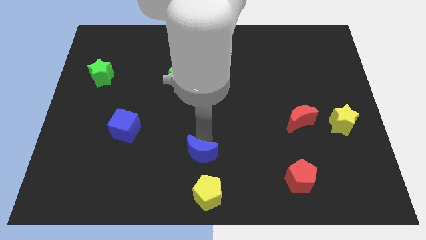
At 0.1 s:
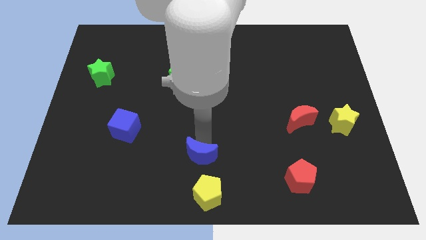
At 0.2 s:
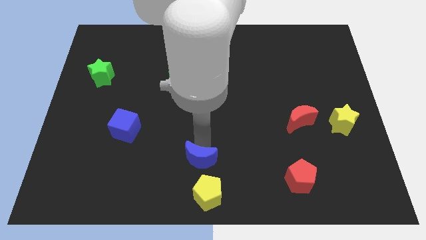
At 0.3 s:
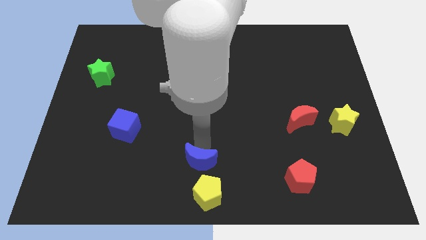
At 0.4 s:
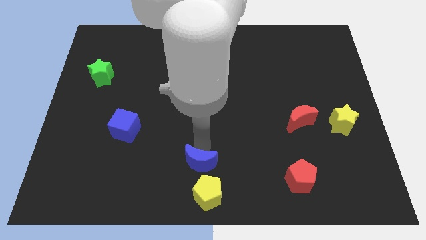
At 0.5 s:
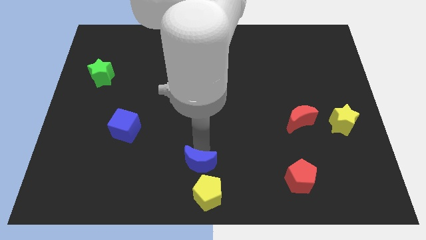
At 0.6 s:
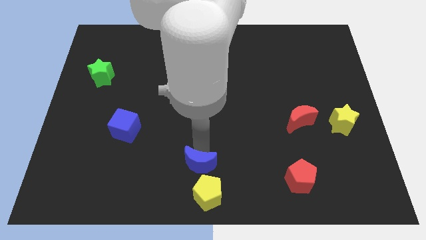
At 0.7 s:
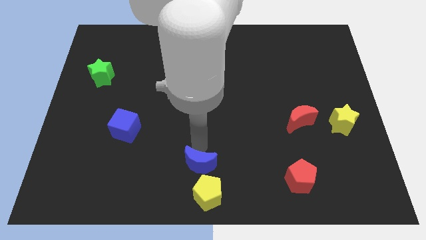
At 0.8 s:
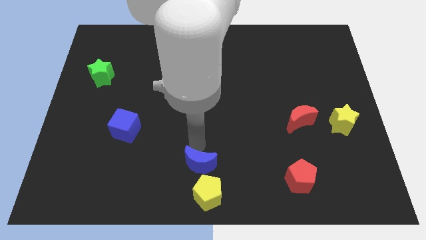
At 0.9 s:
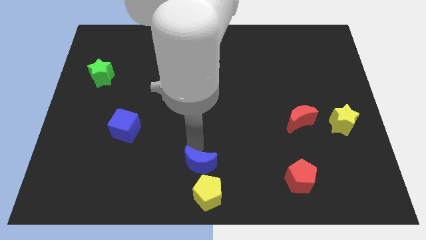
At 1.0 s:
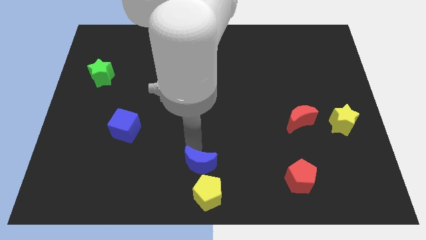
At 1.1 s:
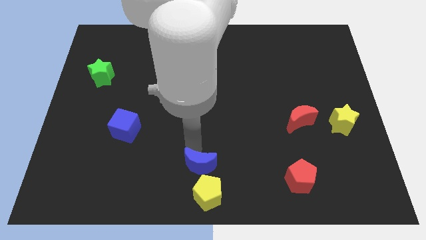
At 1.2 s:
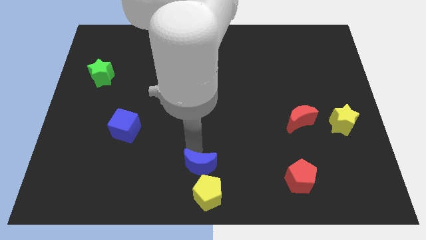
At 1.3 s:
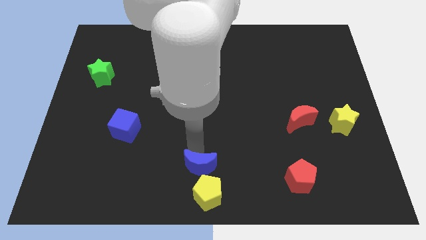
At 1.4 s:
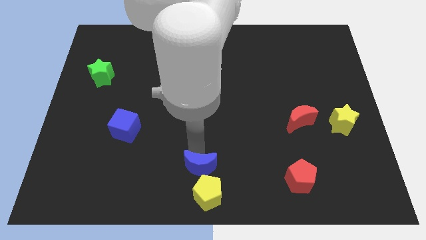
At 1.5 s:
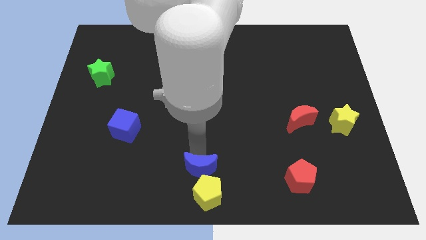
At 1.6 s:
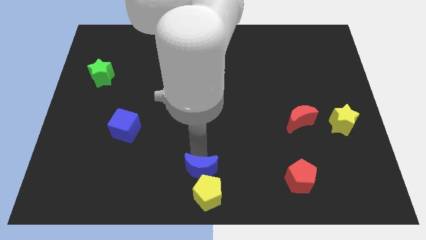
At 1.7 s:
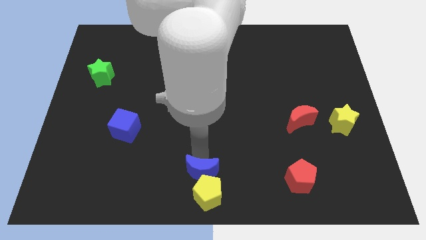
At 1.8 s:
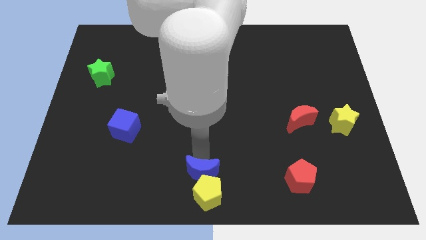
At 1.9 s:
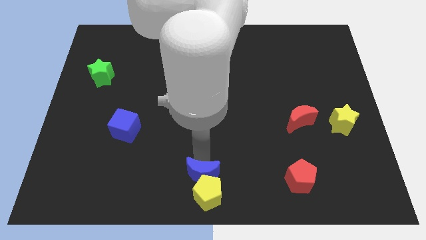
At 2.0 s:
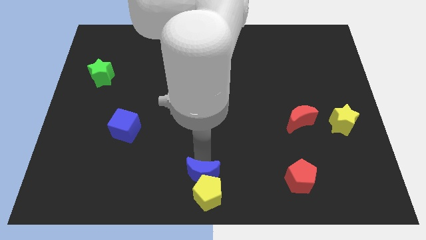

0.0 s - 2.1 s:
place the blue crescent above the yellow pentagon

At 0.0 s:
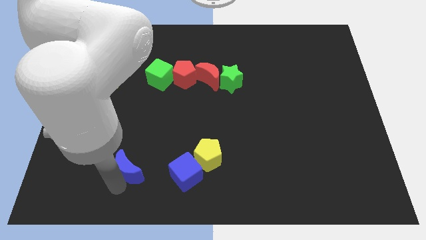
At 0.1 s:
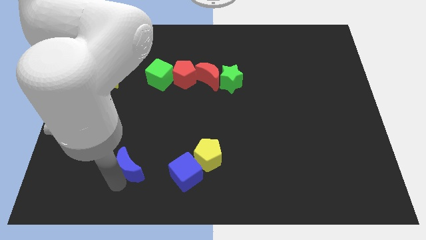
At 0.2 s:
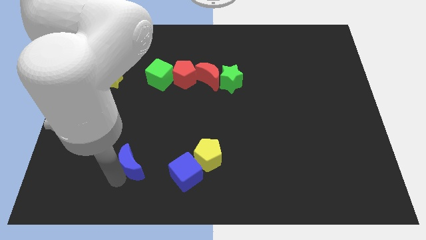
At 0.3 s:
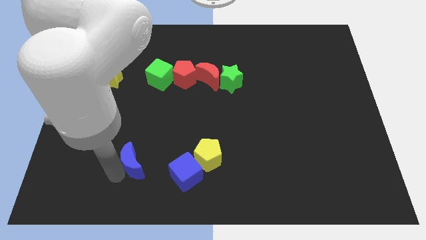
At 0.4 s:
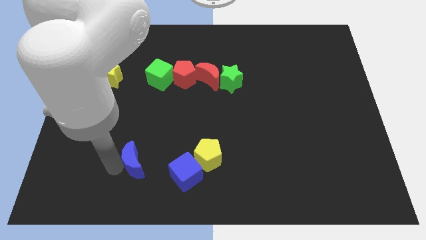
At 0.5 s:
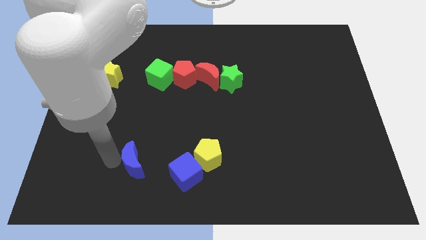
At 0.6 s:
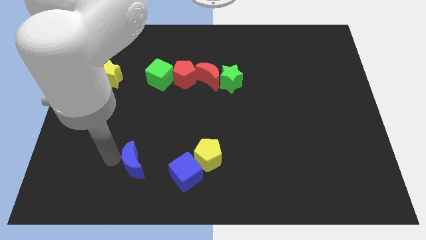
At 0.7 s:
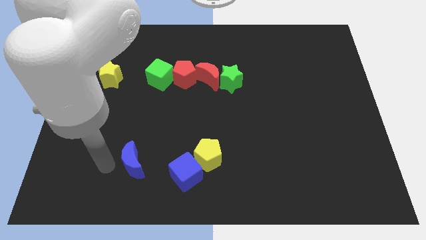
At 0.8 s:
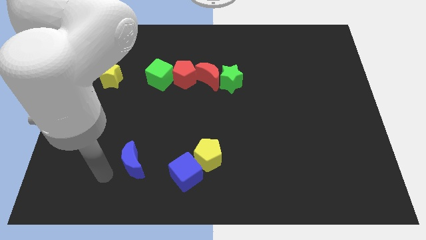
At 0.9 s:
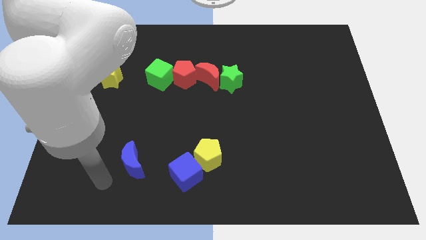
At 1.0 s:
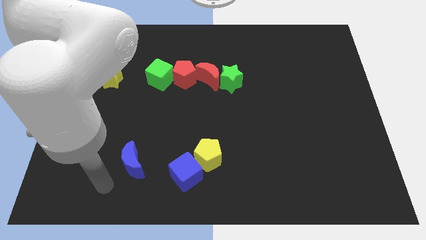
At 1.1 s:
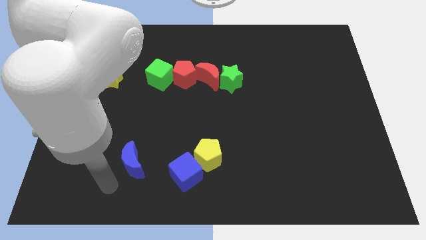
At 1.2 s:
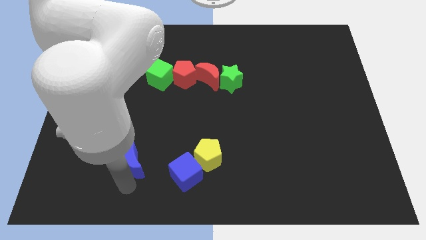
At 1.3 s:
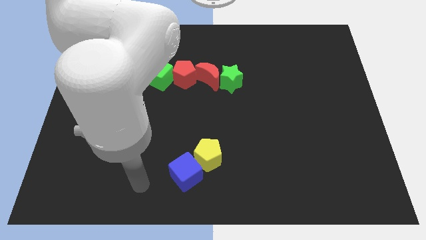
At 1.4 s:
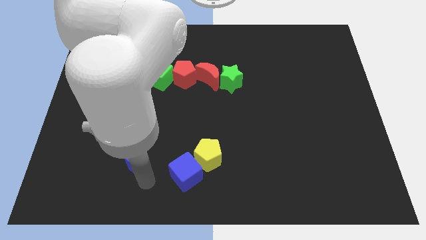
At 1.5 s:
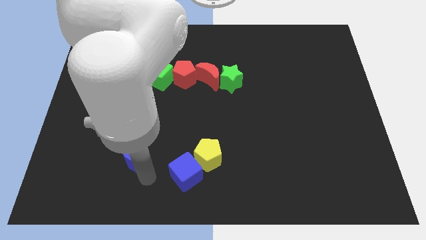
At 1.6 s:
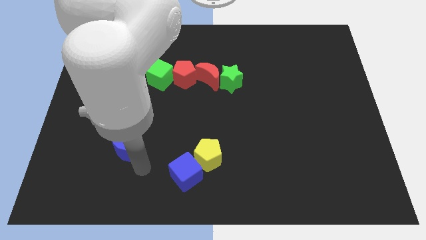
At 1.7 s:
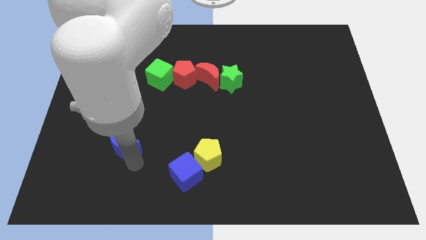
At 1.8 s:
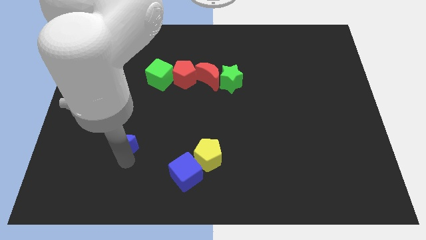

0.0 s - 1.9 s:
drag blue moon slightly upwards

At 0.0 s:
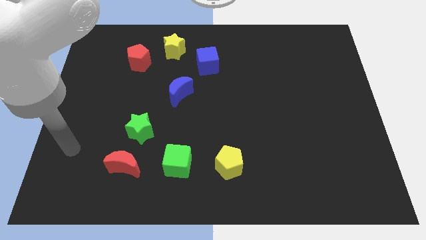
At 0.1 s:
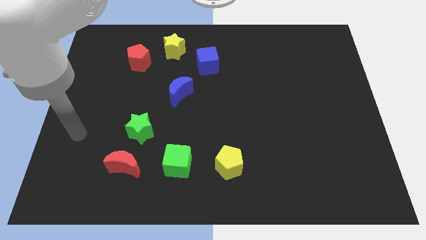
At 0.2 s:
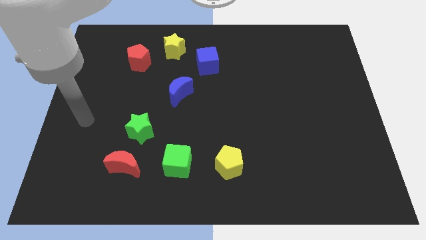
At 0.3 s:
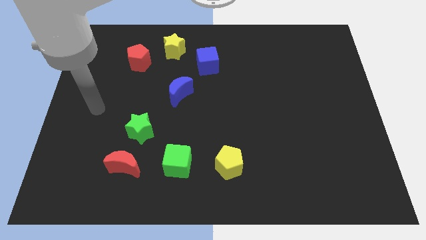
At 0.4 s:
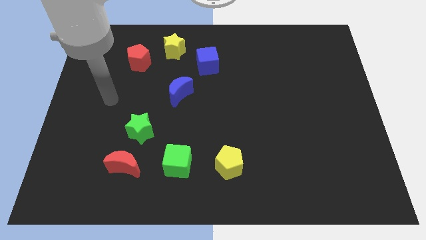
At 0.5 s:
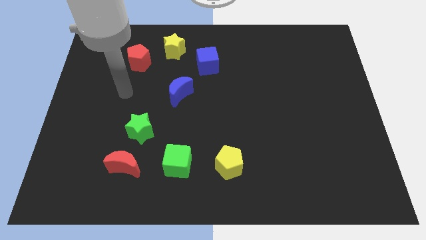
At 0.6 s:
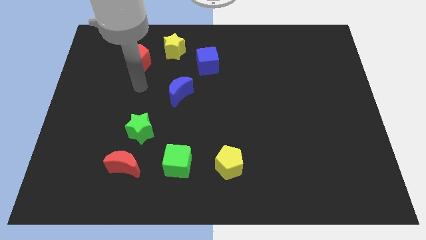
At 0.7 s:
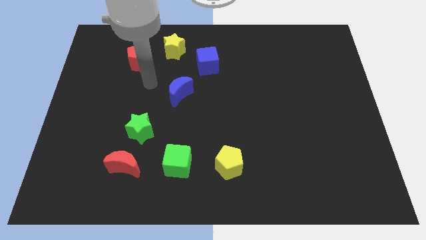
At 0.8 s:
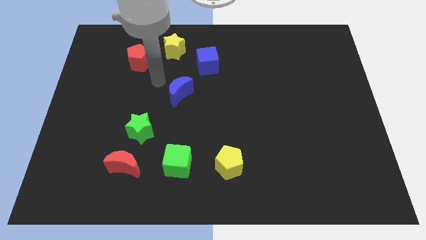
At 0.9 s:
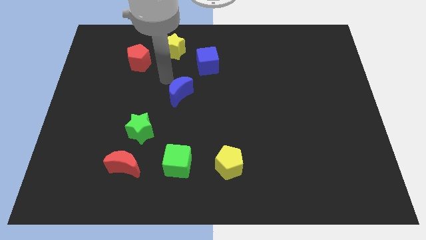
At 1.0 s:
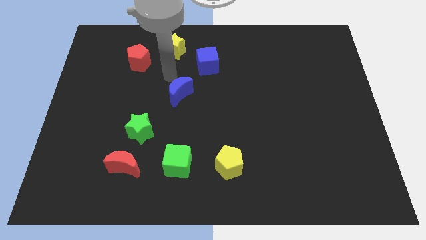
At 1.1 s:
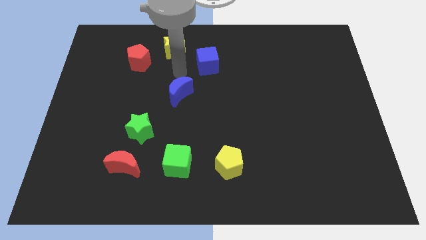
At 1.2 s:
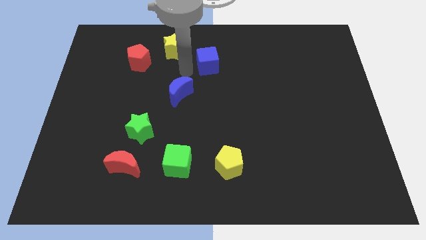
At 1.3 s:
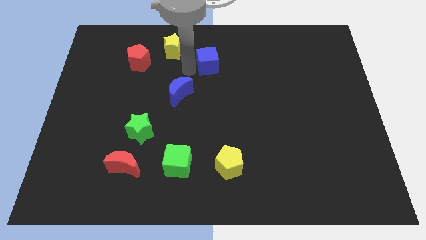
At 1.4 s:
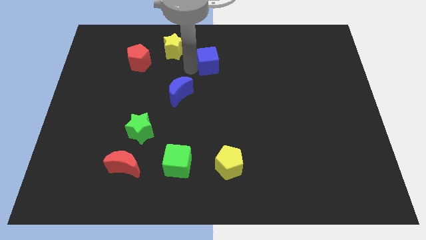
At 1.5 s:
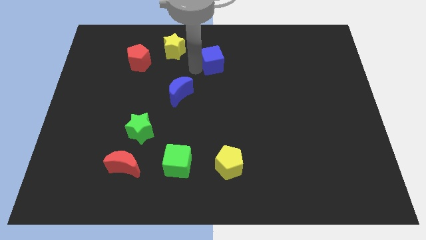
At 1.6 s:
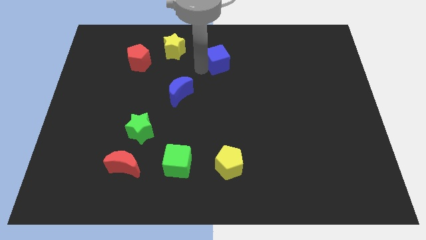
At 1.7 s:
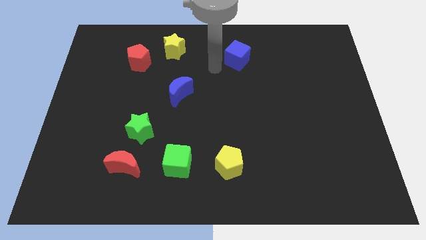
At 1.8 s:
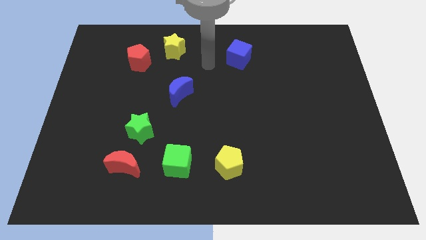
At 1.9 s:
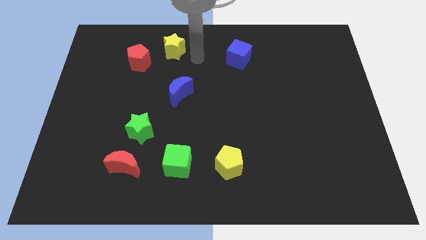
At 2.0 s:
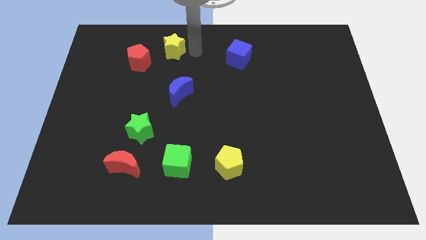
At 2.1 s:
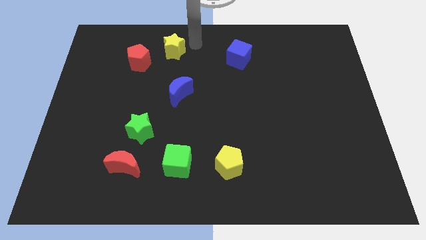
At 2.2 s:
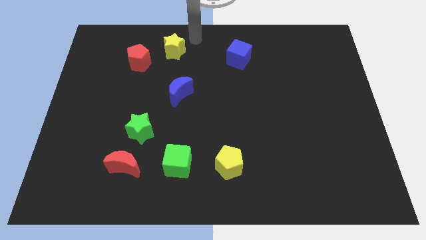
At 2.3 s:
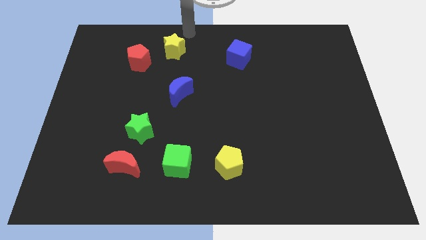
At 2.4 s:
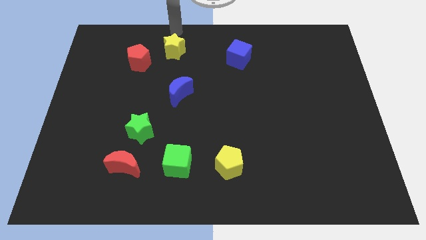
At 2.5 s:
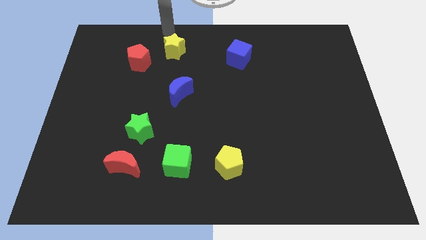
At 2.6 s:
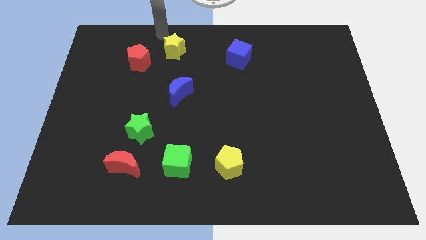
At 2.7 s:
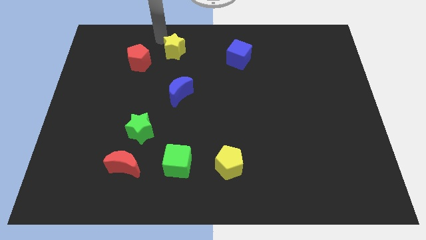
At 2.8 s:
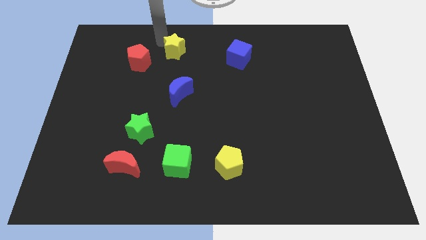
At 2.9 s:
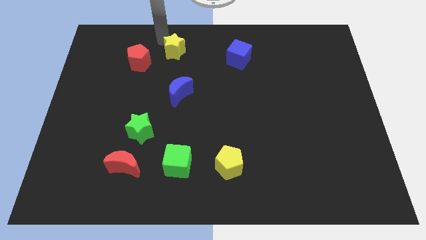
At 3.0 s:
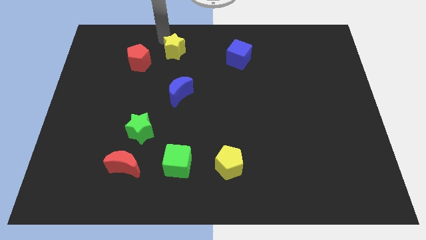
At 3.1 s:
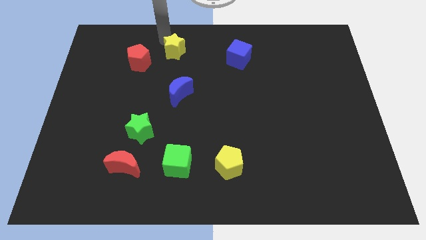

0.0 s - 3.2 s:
slide the blue cube slightly to the right

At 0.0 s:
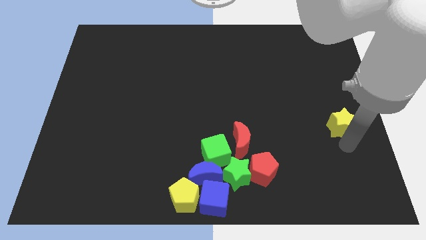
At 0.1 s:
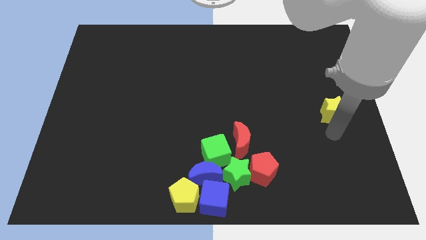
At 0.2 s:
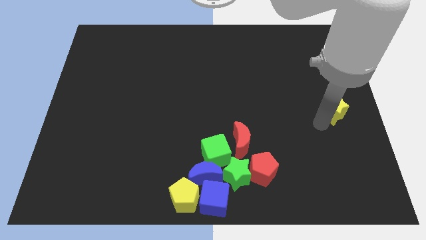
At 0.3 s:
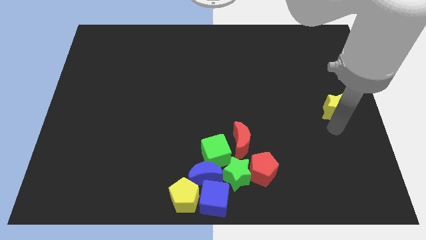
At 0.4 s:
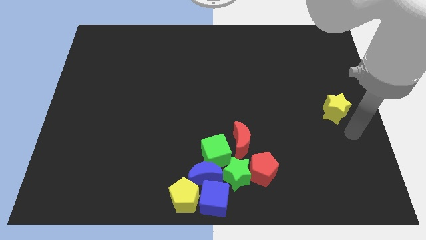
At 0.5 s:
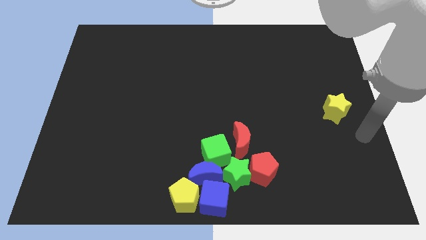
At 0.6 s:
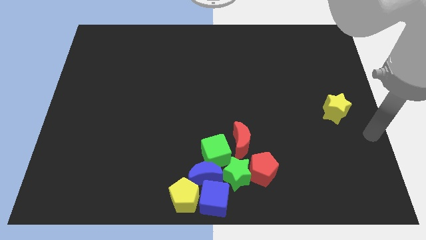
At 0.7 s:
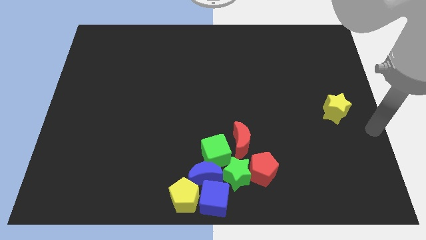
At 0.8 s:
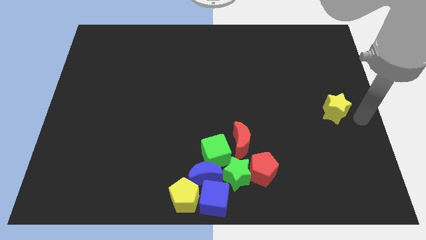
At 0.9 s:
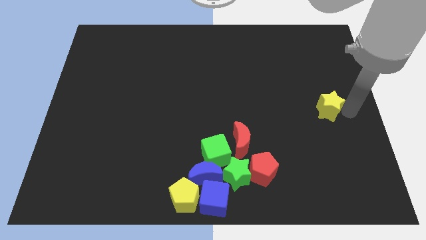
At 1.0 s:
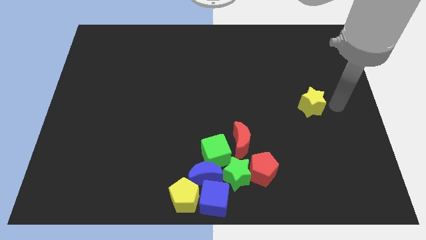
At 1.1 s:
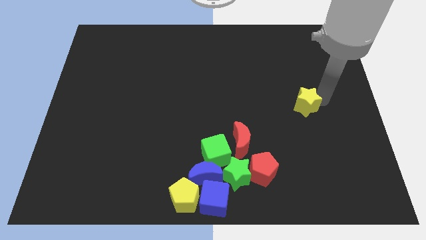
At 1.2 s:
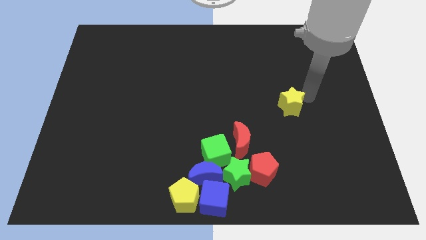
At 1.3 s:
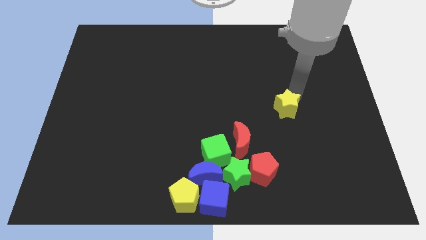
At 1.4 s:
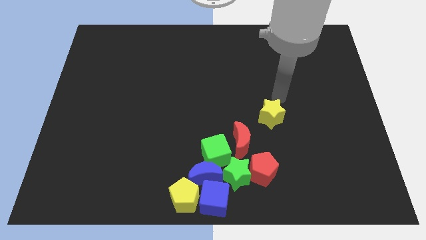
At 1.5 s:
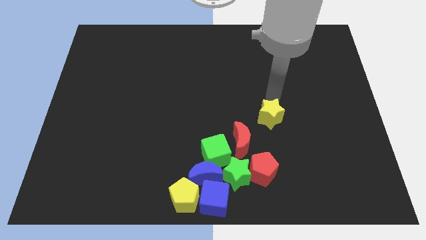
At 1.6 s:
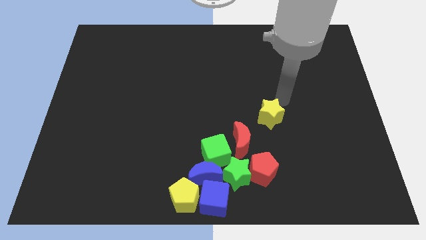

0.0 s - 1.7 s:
place the yellow star to the top right of the red moon
